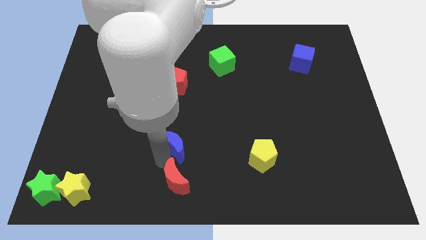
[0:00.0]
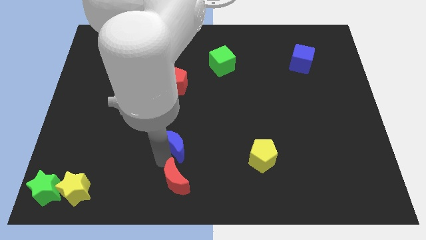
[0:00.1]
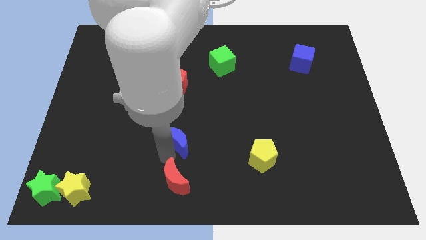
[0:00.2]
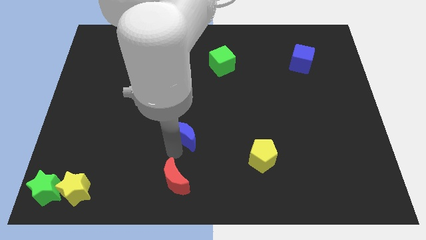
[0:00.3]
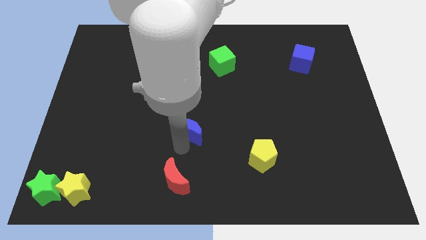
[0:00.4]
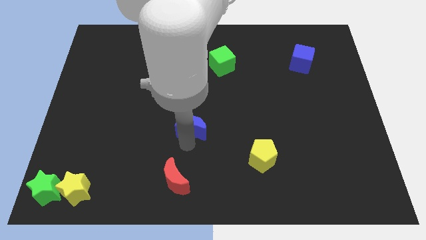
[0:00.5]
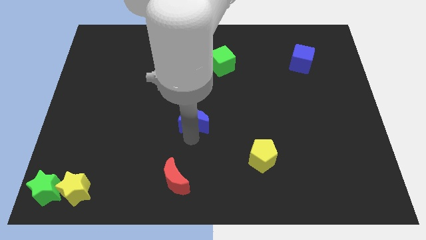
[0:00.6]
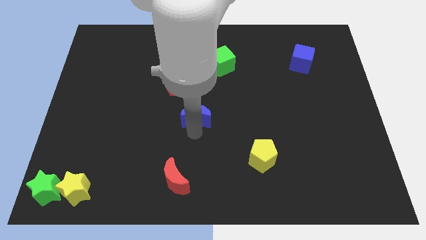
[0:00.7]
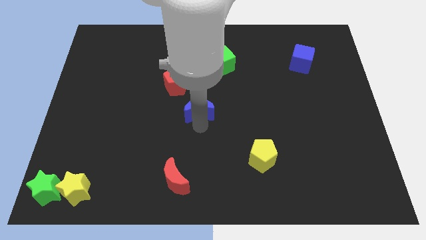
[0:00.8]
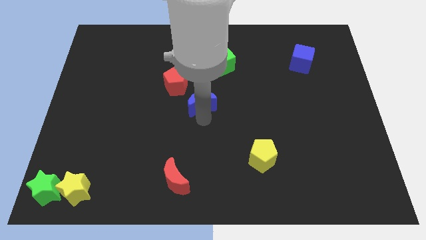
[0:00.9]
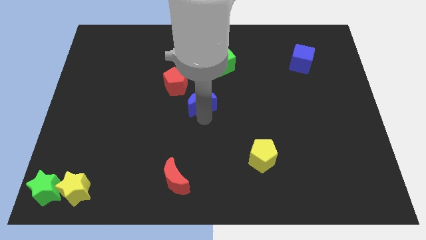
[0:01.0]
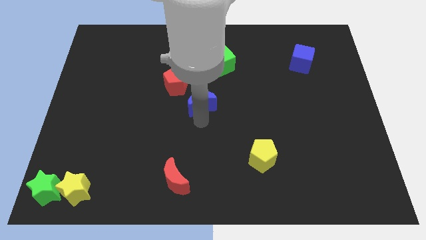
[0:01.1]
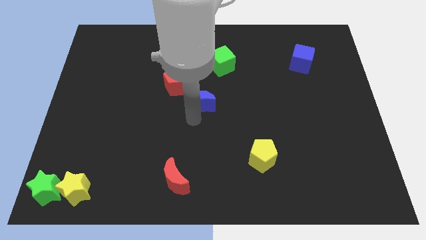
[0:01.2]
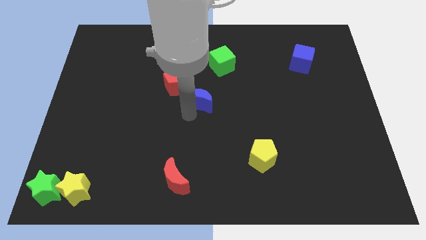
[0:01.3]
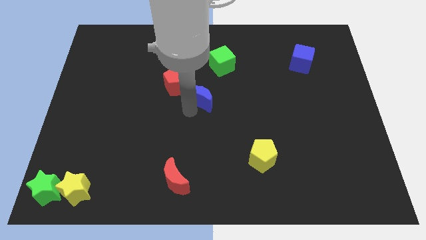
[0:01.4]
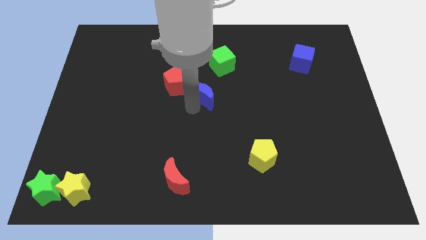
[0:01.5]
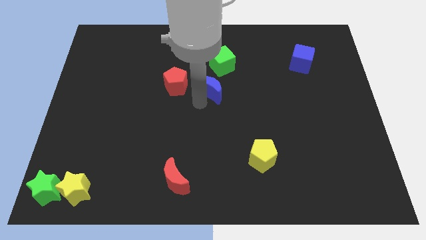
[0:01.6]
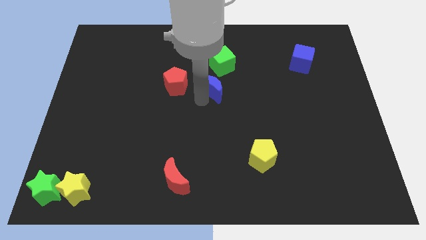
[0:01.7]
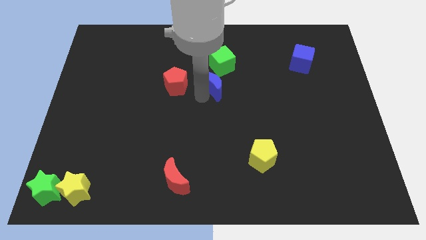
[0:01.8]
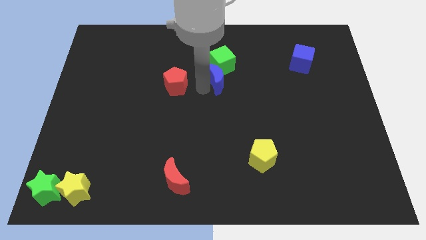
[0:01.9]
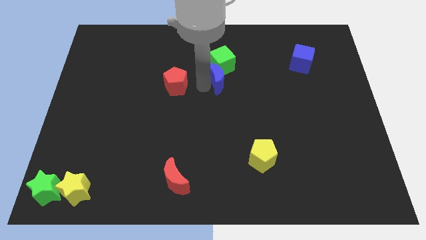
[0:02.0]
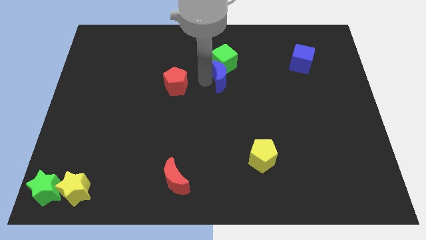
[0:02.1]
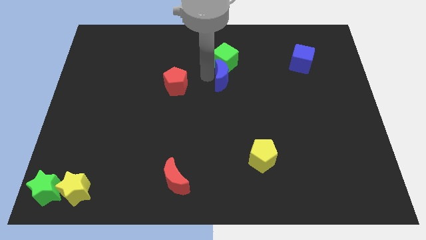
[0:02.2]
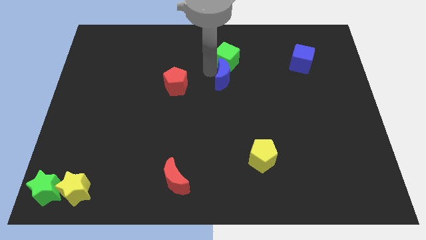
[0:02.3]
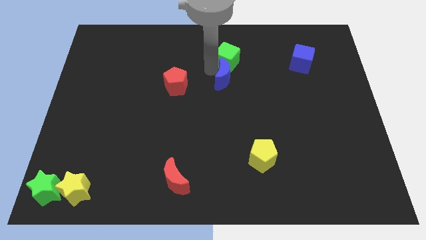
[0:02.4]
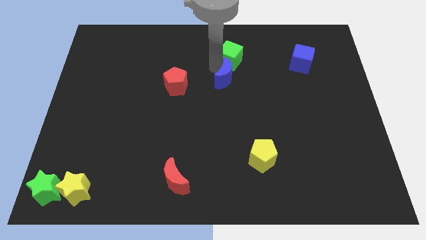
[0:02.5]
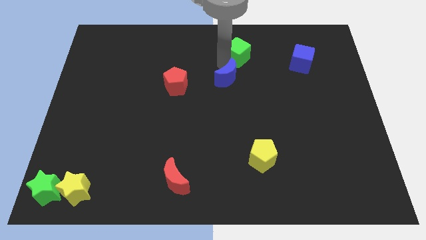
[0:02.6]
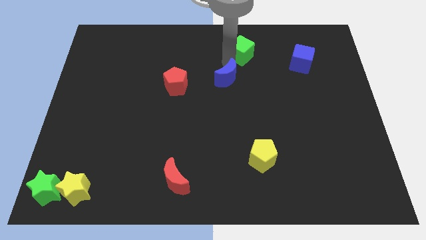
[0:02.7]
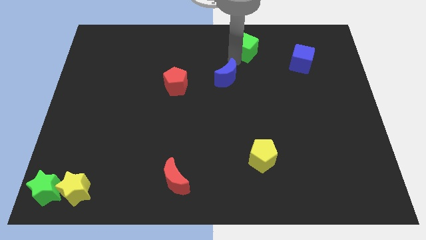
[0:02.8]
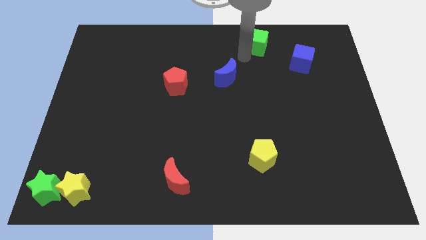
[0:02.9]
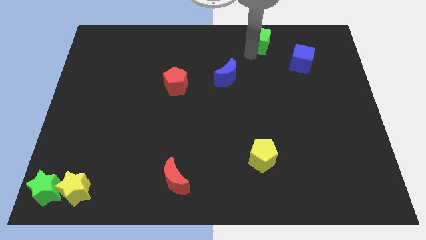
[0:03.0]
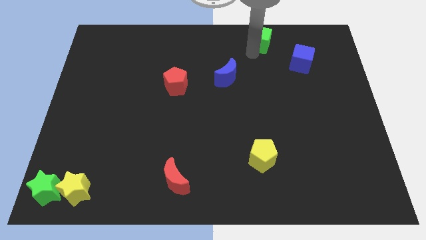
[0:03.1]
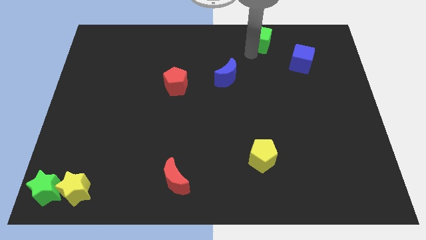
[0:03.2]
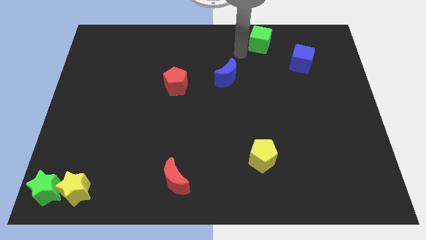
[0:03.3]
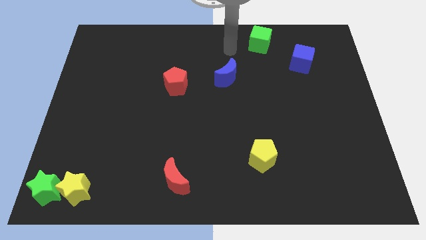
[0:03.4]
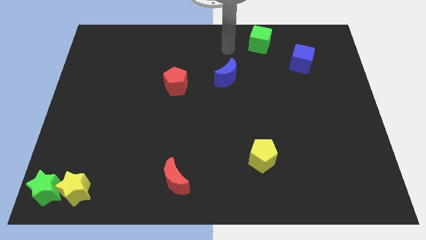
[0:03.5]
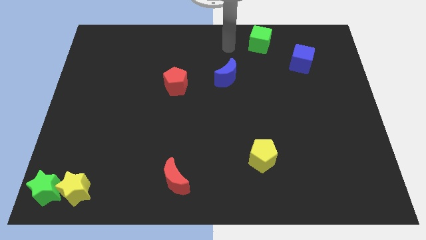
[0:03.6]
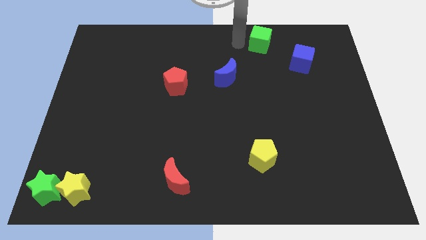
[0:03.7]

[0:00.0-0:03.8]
move green cube to the top right

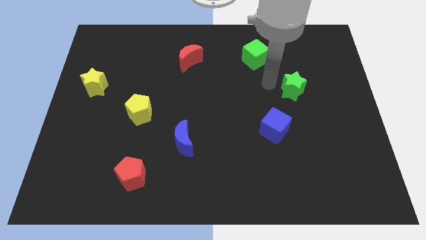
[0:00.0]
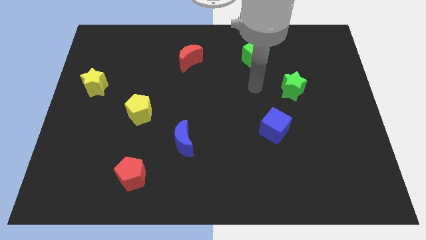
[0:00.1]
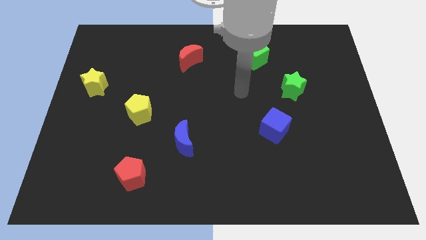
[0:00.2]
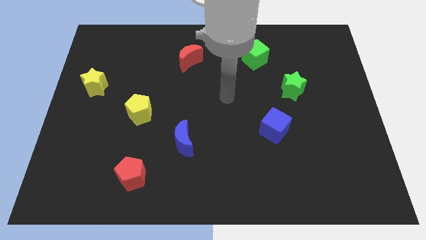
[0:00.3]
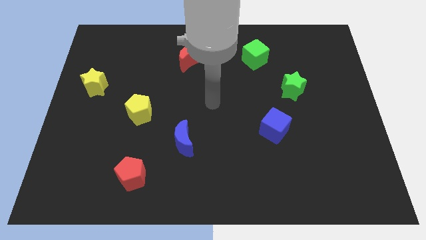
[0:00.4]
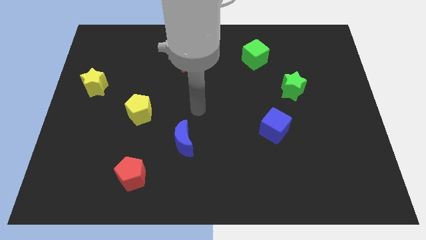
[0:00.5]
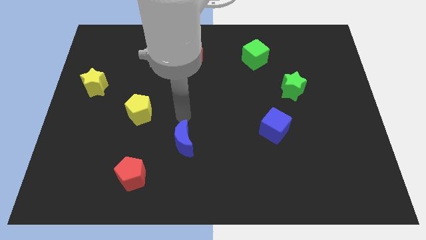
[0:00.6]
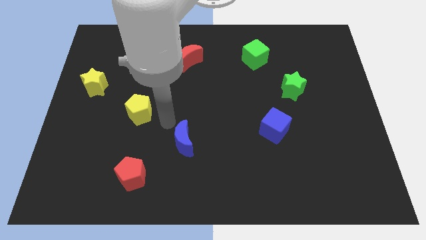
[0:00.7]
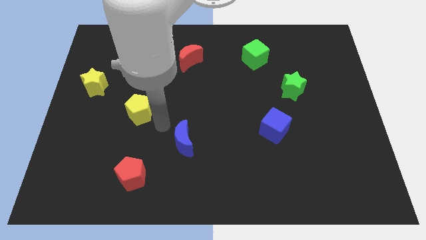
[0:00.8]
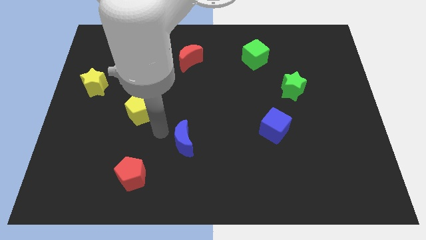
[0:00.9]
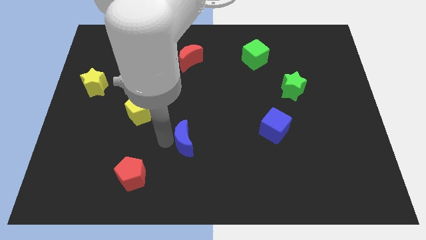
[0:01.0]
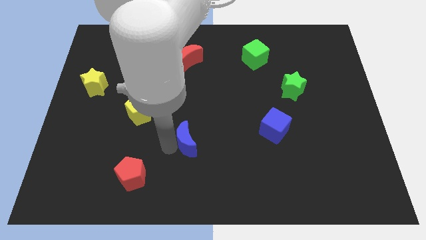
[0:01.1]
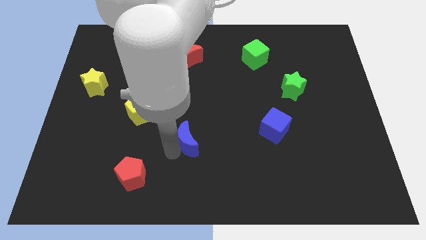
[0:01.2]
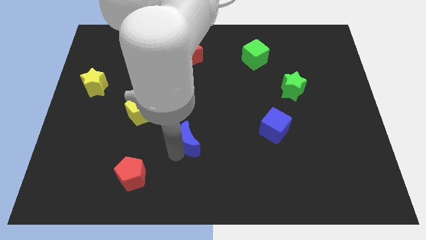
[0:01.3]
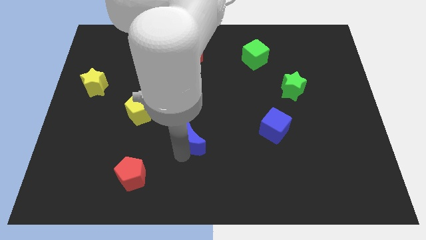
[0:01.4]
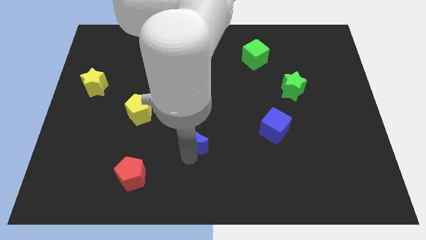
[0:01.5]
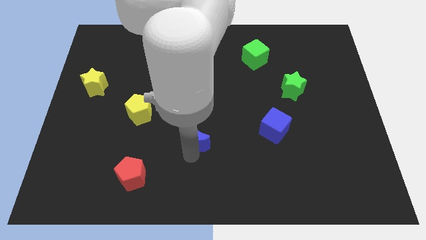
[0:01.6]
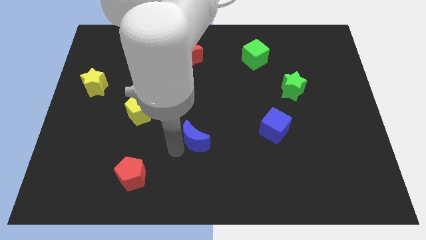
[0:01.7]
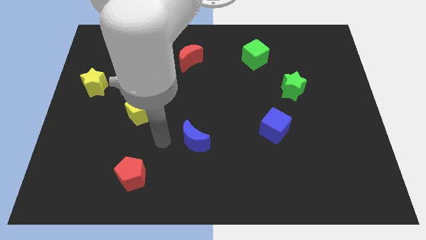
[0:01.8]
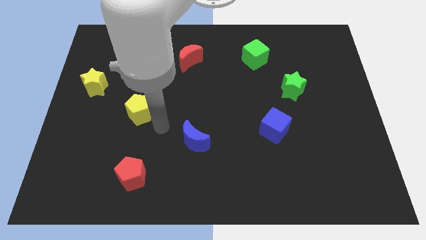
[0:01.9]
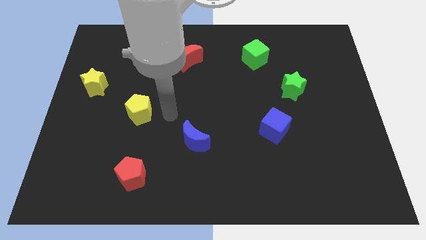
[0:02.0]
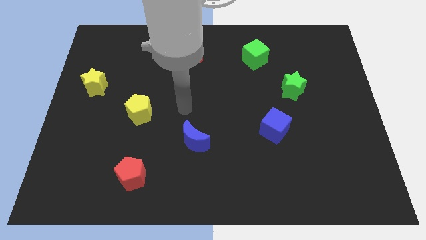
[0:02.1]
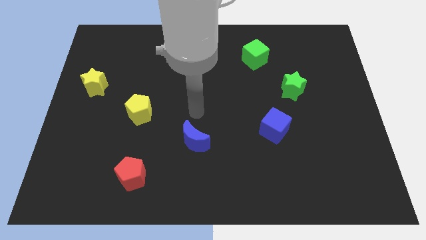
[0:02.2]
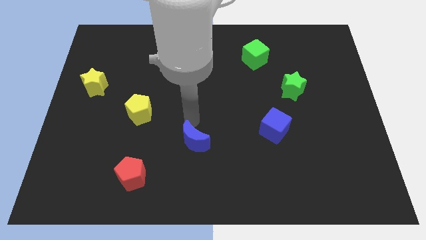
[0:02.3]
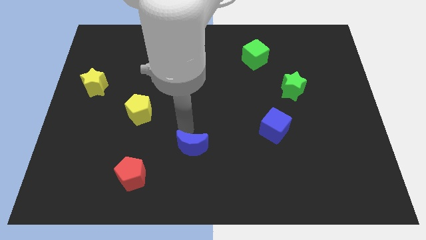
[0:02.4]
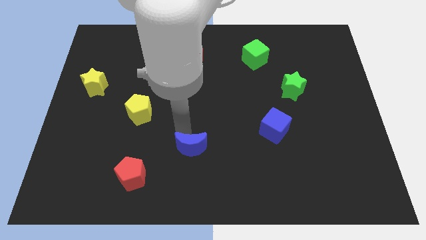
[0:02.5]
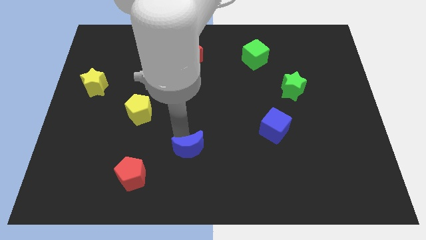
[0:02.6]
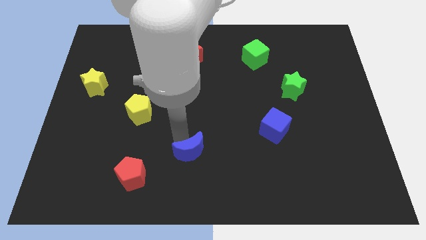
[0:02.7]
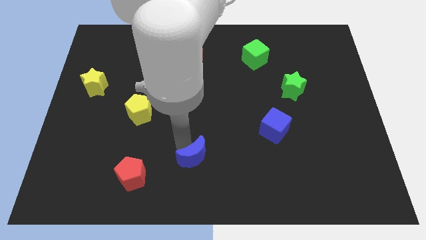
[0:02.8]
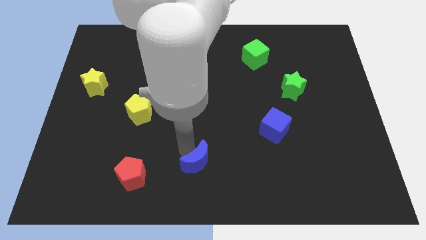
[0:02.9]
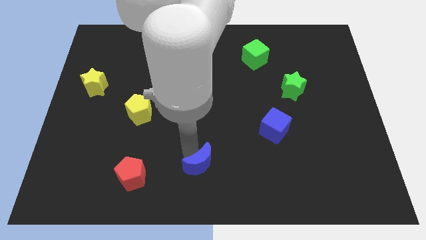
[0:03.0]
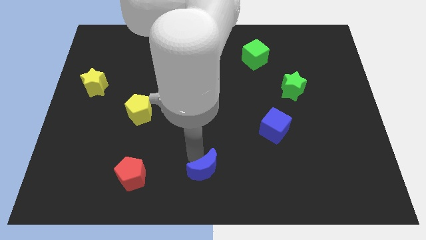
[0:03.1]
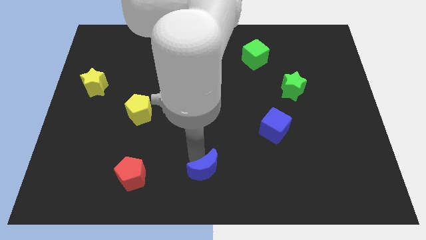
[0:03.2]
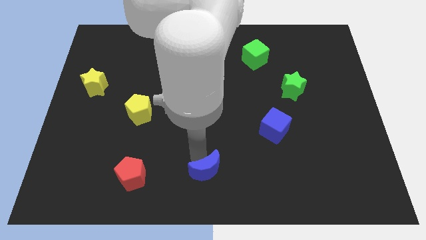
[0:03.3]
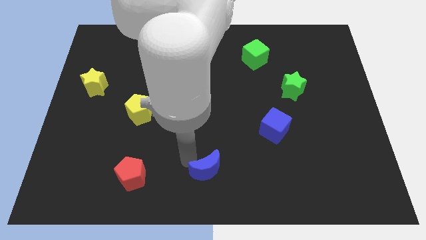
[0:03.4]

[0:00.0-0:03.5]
push the blue moon downward

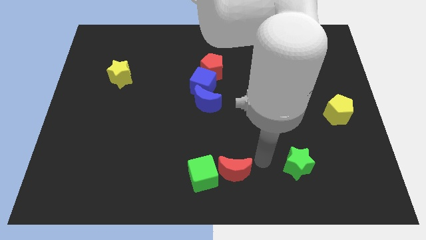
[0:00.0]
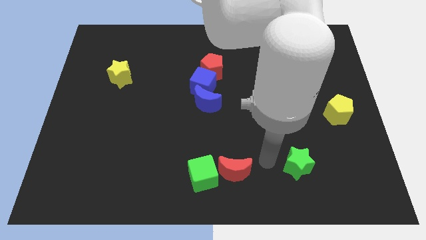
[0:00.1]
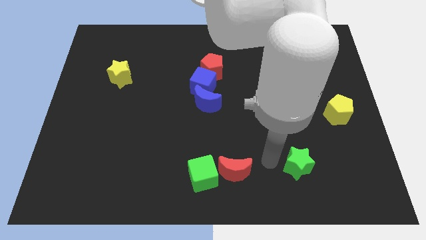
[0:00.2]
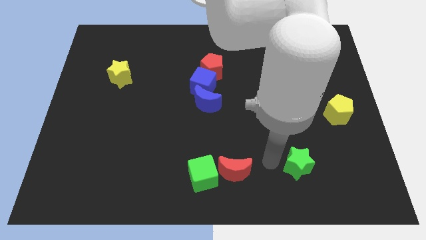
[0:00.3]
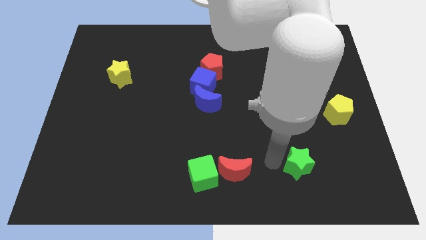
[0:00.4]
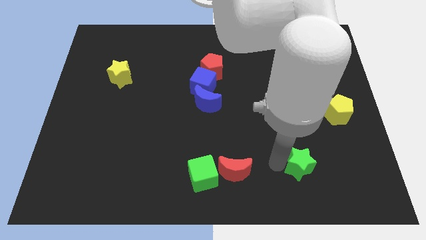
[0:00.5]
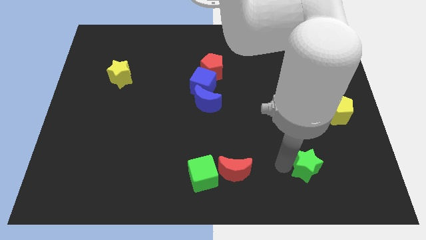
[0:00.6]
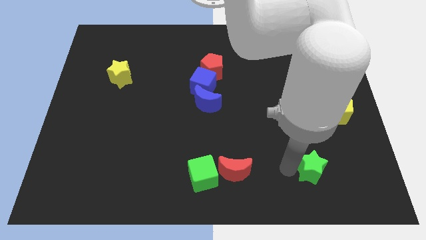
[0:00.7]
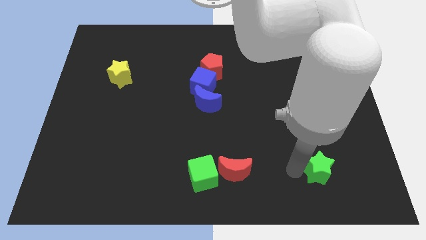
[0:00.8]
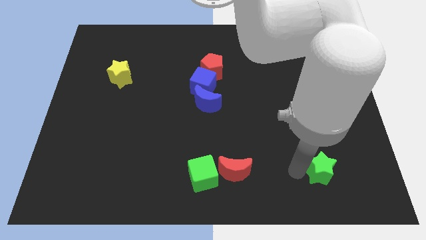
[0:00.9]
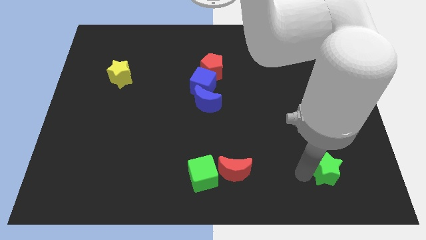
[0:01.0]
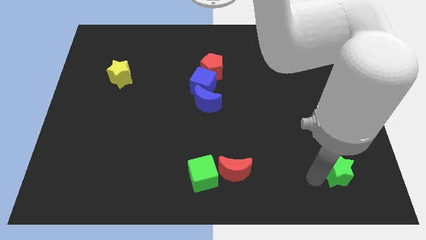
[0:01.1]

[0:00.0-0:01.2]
slightly move the green star towards the right side of the board

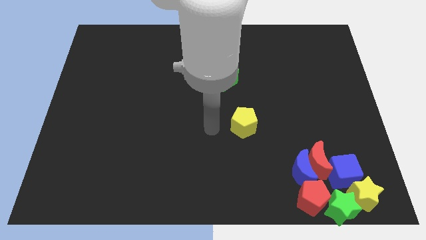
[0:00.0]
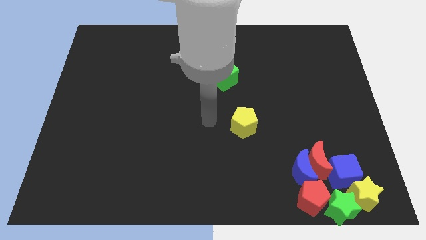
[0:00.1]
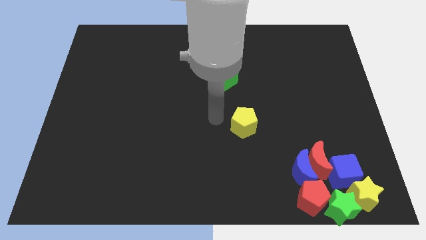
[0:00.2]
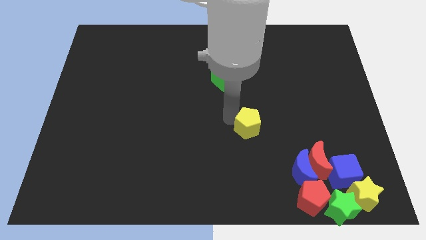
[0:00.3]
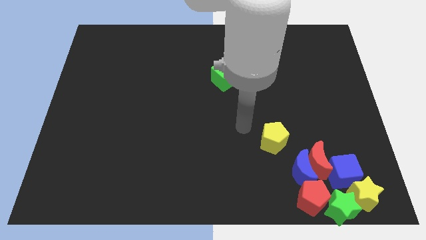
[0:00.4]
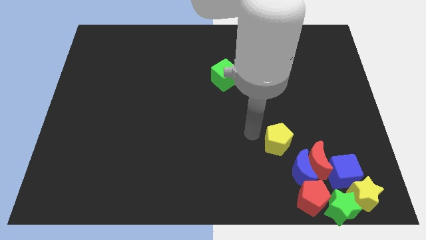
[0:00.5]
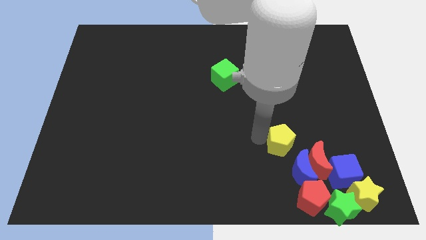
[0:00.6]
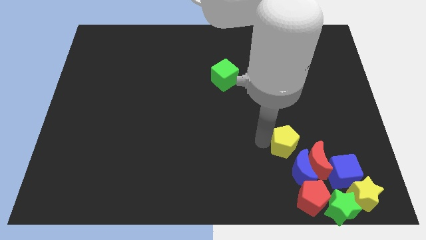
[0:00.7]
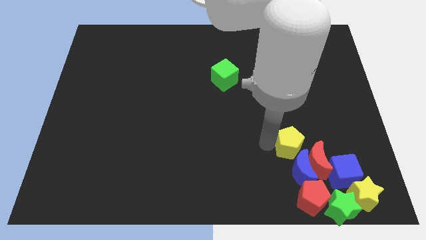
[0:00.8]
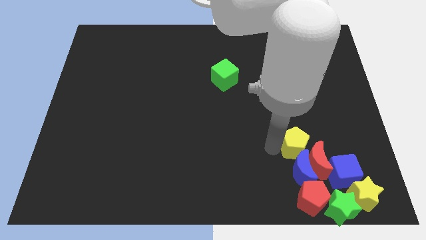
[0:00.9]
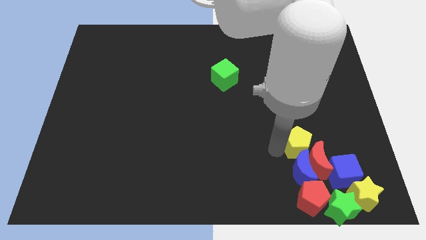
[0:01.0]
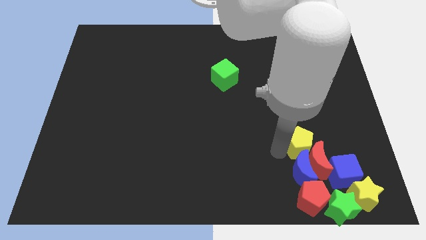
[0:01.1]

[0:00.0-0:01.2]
push the yellow pentagon above the blue moon
